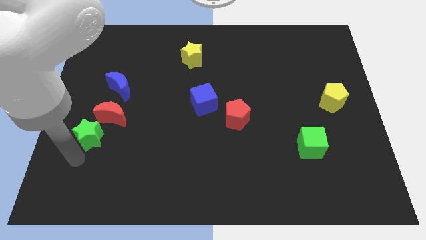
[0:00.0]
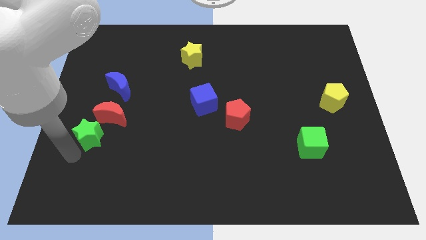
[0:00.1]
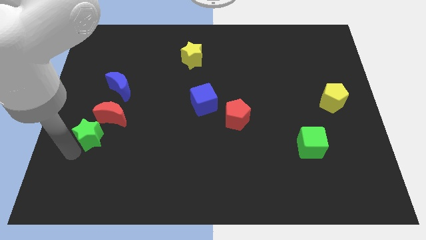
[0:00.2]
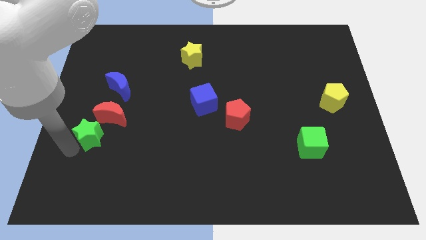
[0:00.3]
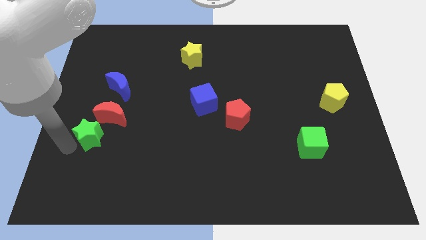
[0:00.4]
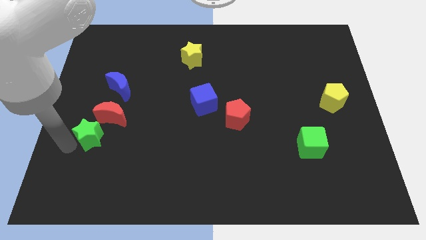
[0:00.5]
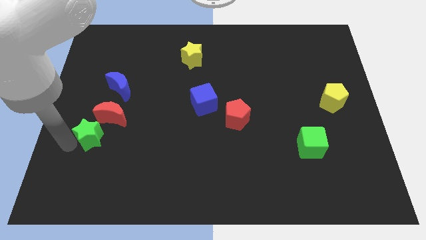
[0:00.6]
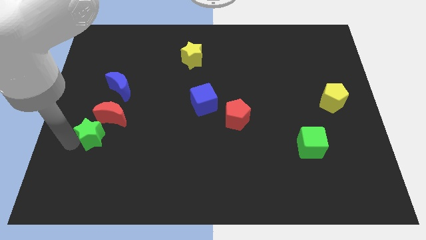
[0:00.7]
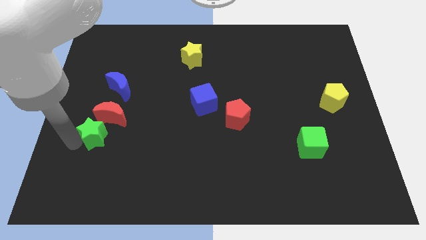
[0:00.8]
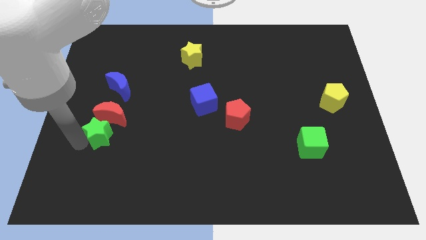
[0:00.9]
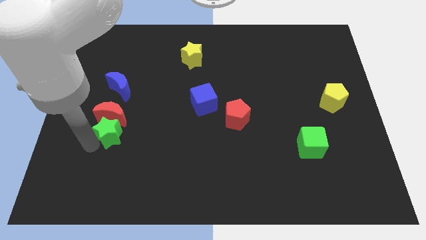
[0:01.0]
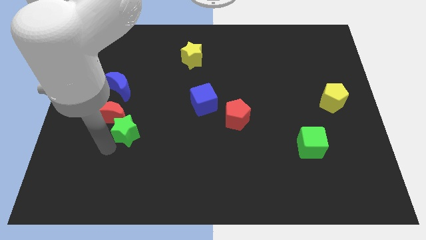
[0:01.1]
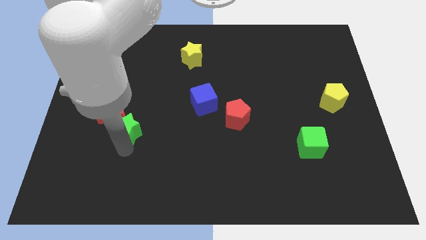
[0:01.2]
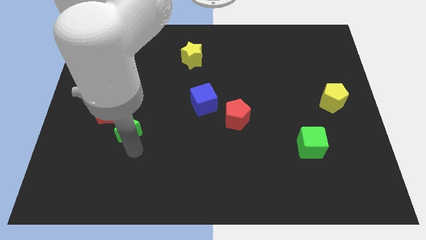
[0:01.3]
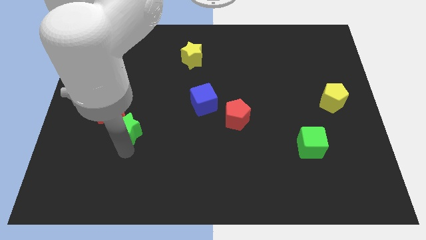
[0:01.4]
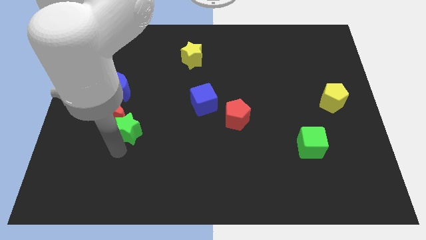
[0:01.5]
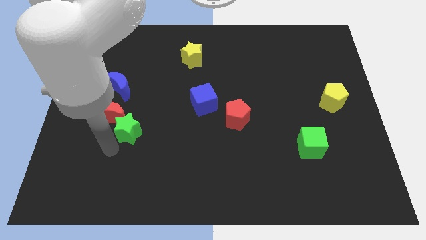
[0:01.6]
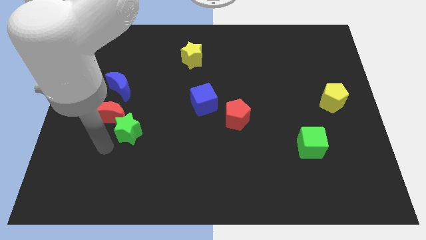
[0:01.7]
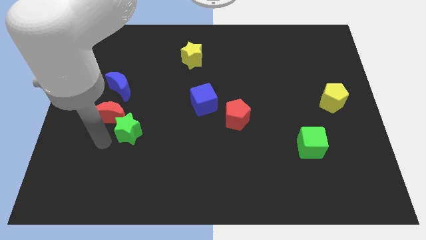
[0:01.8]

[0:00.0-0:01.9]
push the green star towards right side

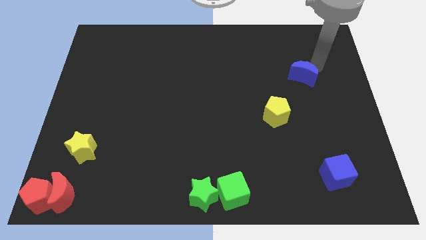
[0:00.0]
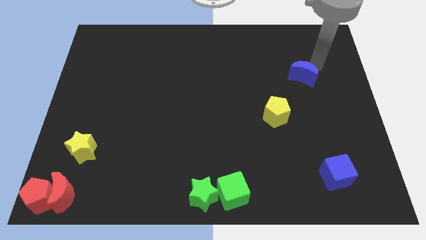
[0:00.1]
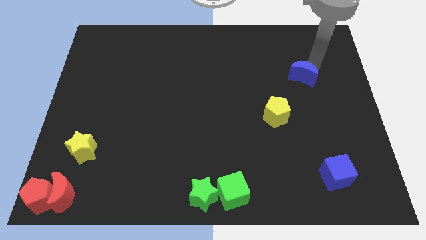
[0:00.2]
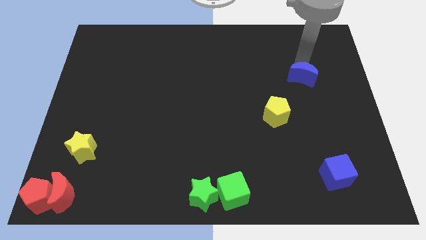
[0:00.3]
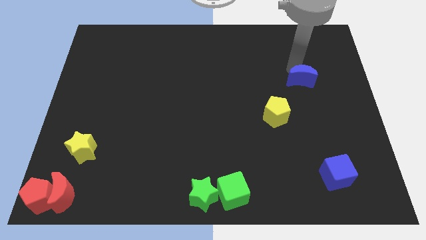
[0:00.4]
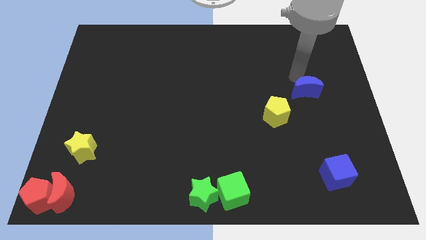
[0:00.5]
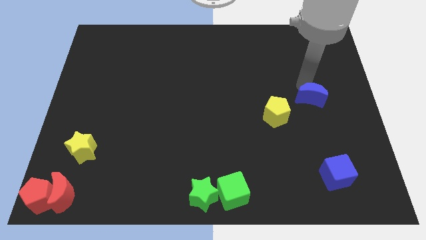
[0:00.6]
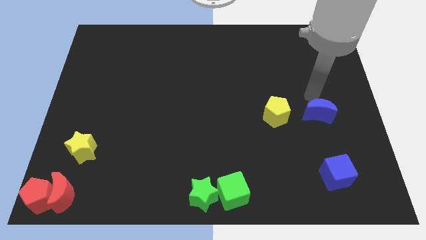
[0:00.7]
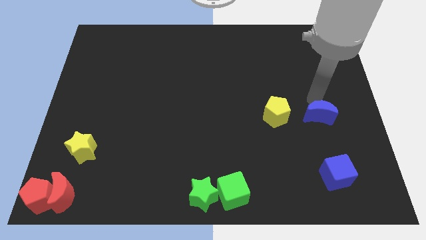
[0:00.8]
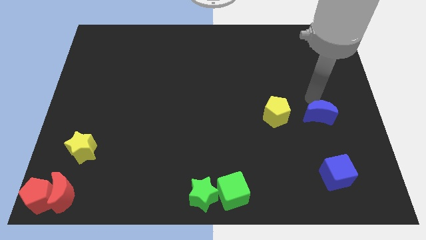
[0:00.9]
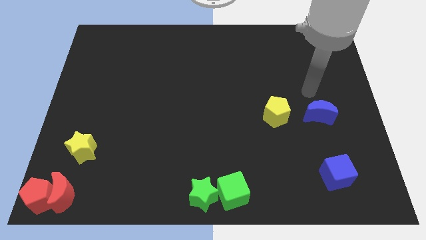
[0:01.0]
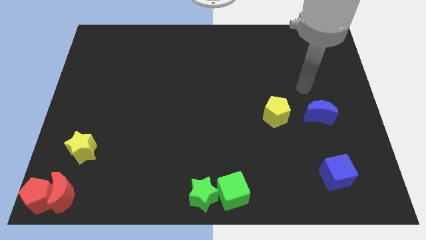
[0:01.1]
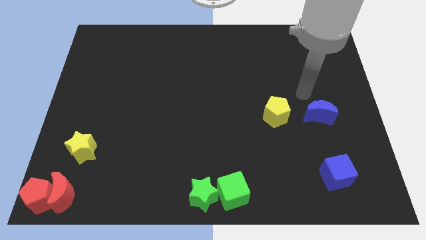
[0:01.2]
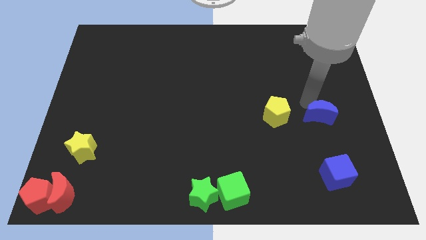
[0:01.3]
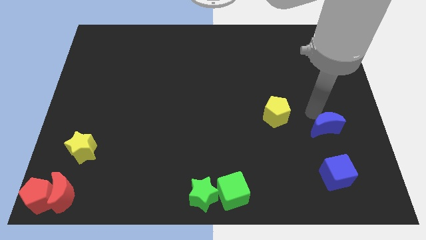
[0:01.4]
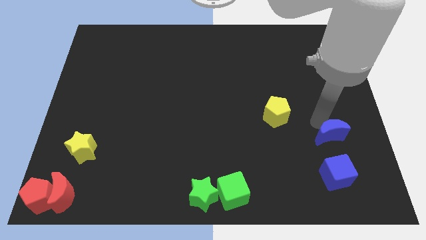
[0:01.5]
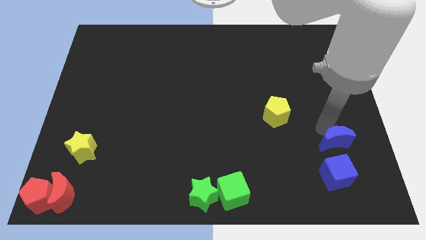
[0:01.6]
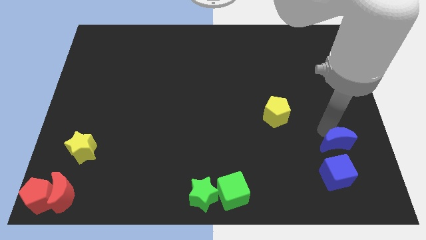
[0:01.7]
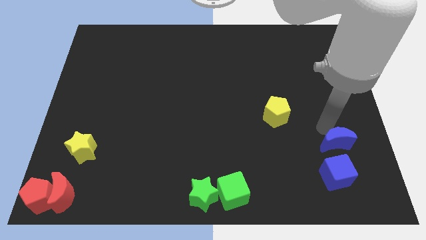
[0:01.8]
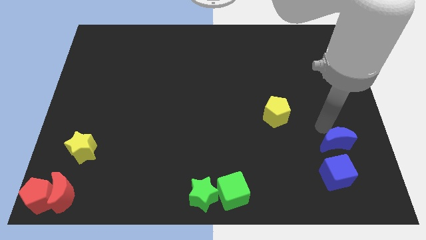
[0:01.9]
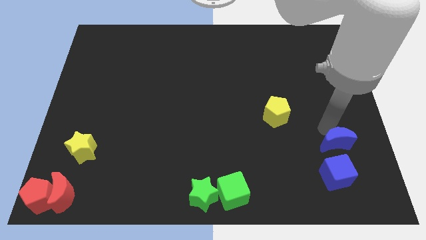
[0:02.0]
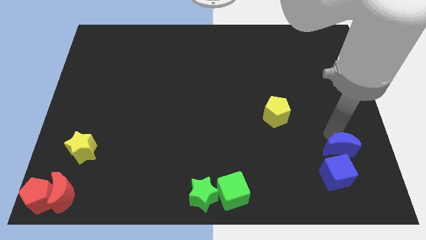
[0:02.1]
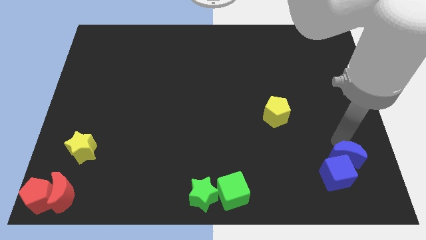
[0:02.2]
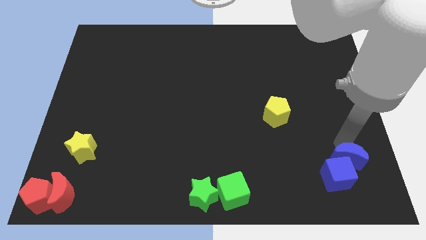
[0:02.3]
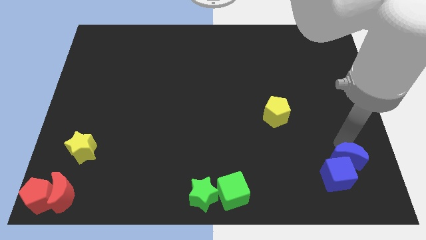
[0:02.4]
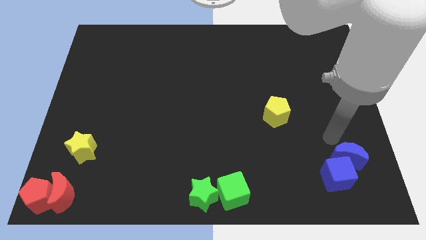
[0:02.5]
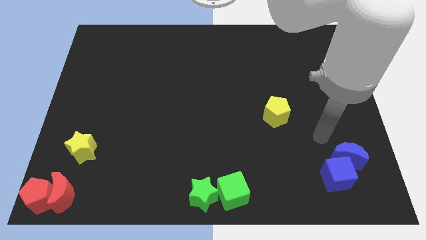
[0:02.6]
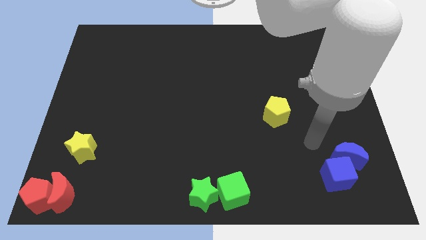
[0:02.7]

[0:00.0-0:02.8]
move blue moon into blue cube

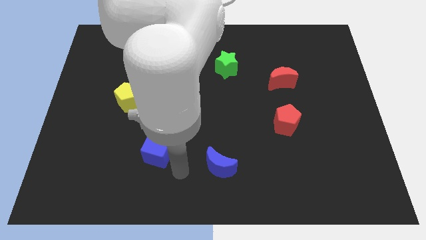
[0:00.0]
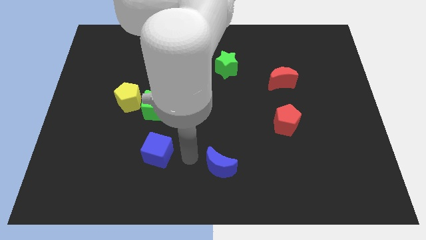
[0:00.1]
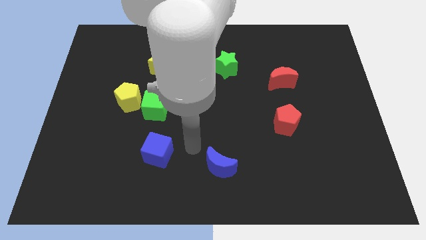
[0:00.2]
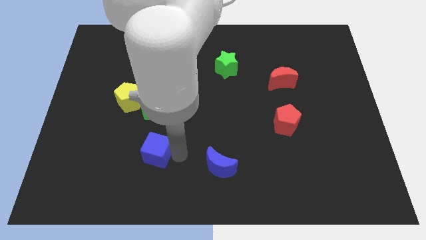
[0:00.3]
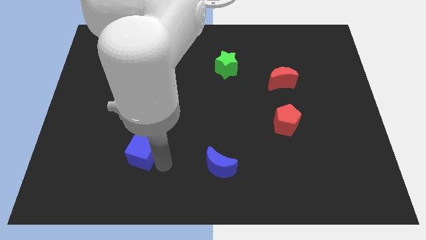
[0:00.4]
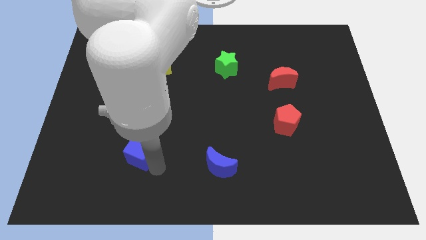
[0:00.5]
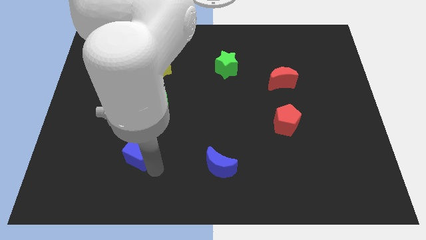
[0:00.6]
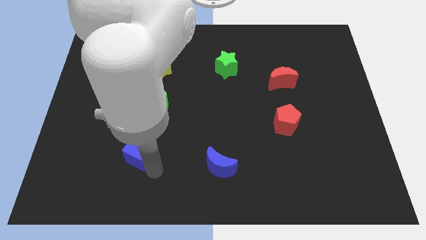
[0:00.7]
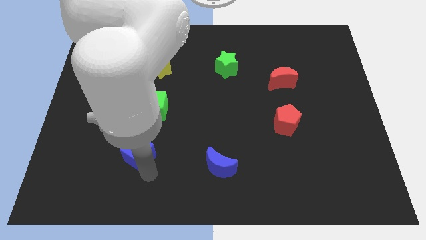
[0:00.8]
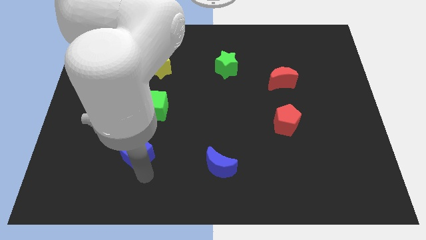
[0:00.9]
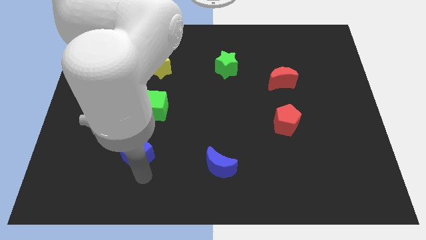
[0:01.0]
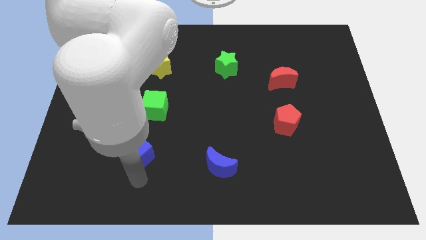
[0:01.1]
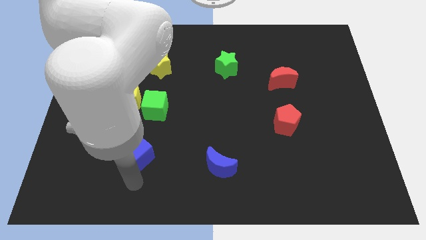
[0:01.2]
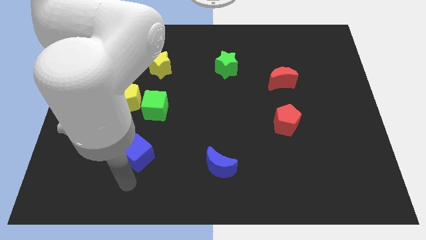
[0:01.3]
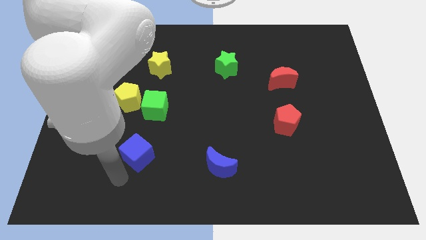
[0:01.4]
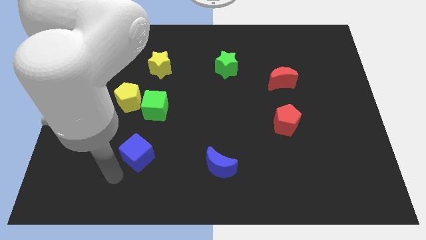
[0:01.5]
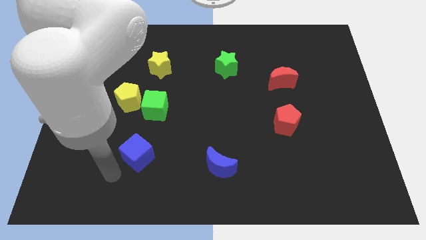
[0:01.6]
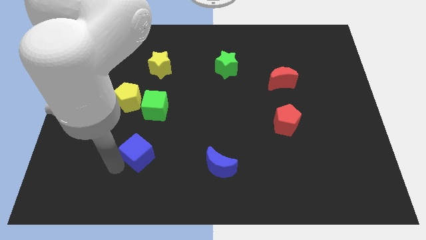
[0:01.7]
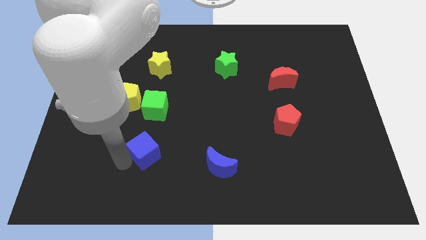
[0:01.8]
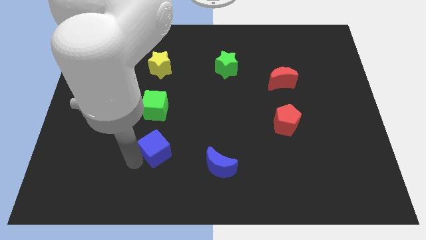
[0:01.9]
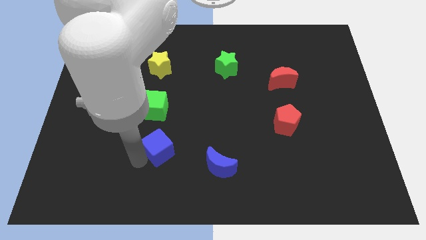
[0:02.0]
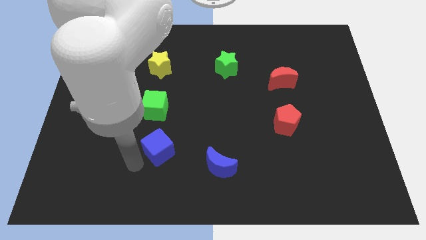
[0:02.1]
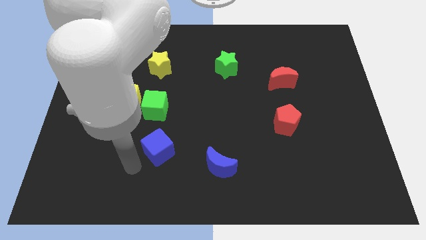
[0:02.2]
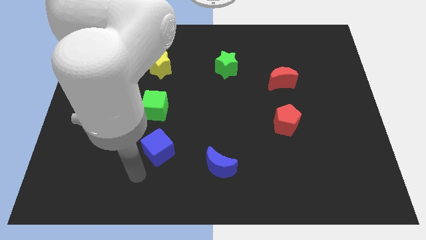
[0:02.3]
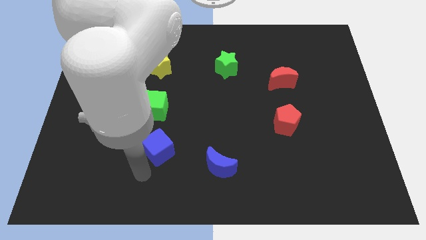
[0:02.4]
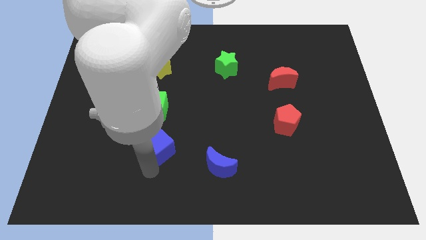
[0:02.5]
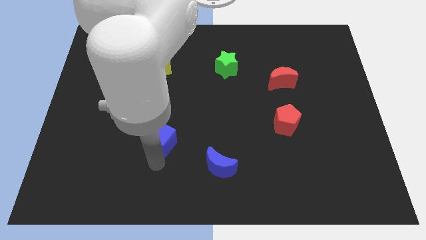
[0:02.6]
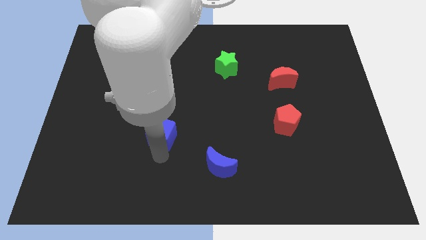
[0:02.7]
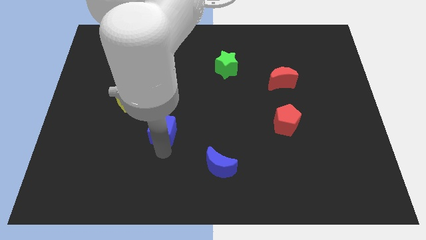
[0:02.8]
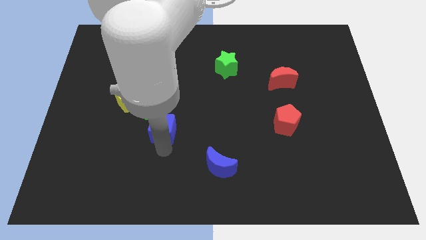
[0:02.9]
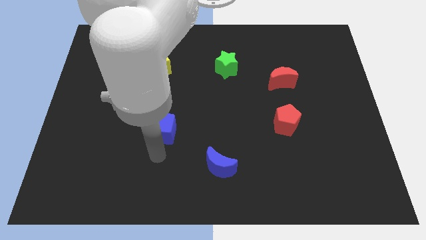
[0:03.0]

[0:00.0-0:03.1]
place the blue cube near to the green cube

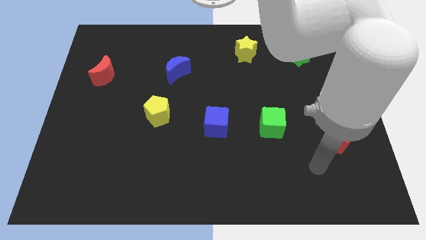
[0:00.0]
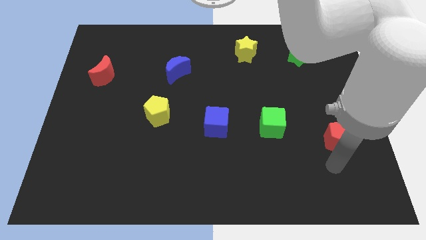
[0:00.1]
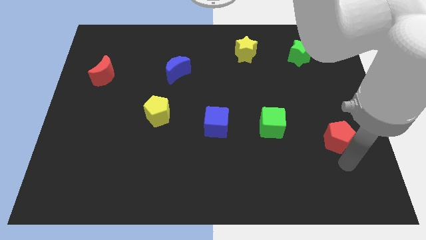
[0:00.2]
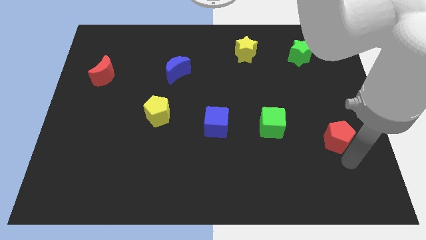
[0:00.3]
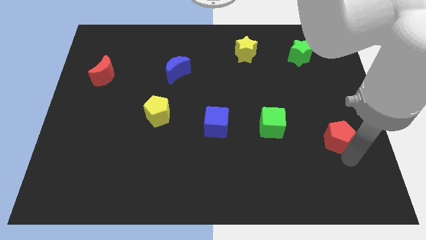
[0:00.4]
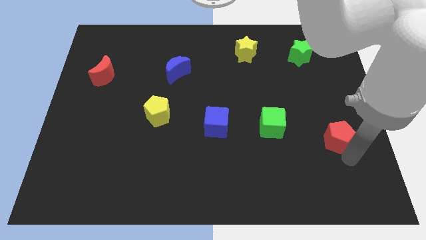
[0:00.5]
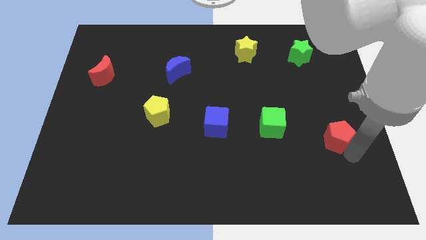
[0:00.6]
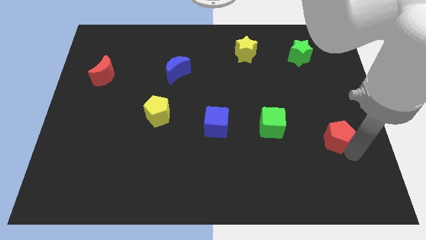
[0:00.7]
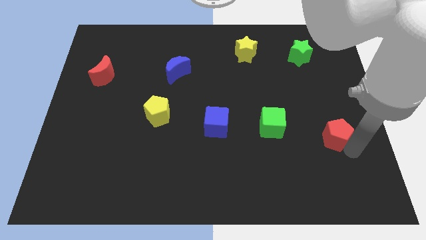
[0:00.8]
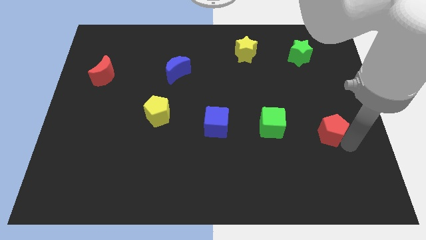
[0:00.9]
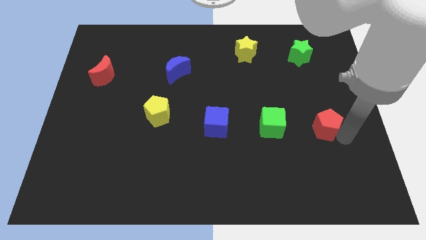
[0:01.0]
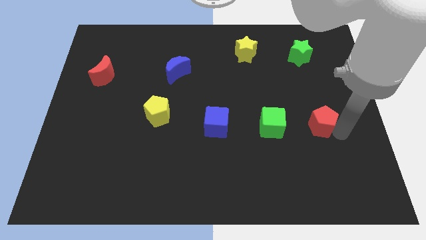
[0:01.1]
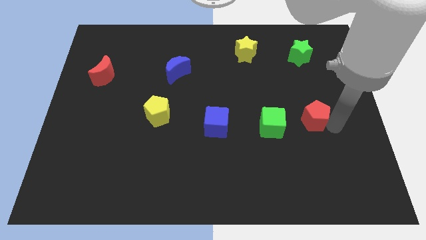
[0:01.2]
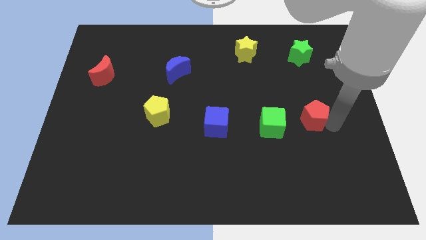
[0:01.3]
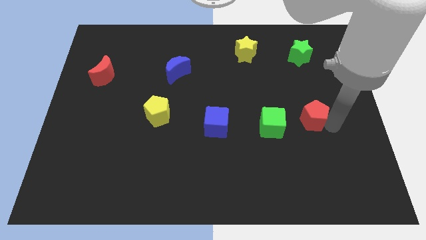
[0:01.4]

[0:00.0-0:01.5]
push the red pentagon upward
